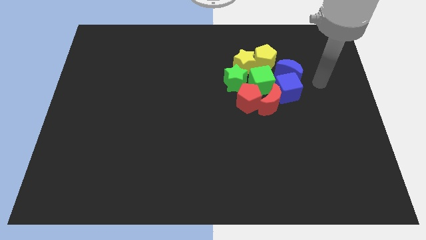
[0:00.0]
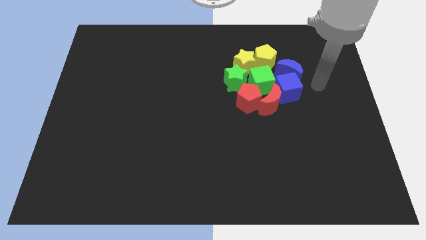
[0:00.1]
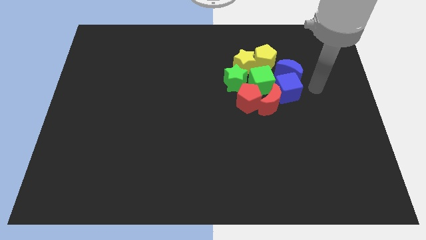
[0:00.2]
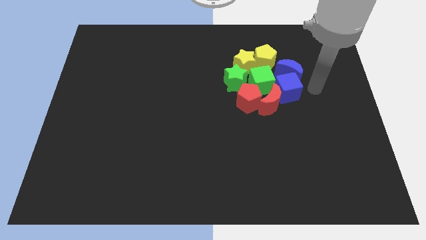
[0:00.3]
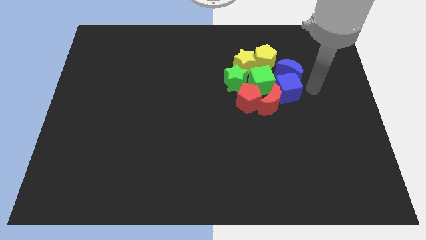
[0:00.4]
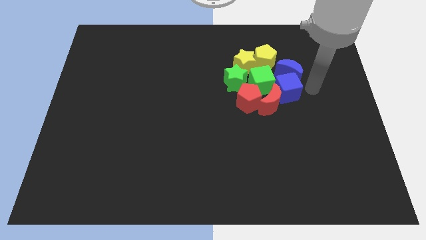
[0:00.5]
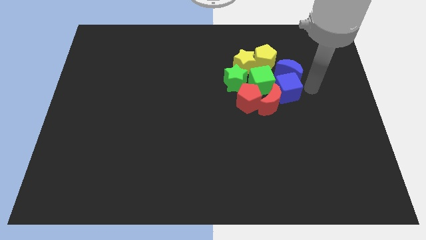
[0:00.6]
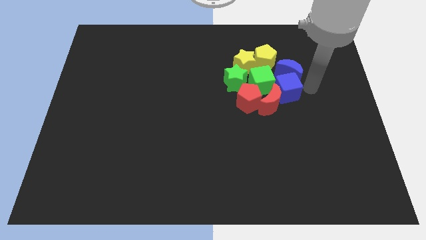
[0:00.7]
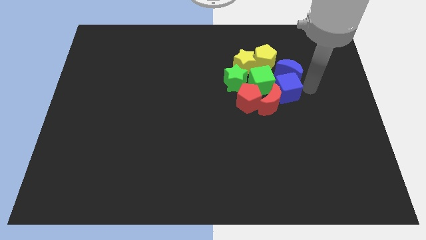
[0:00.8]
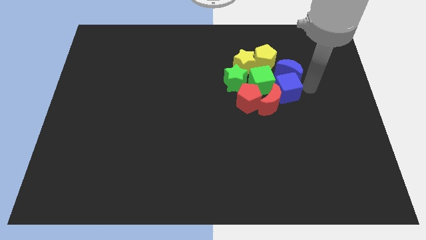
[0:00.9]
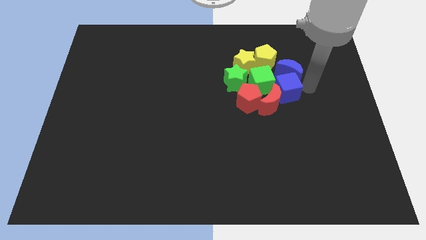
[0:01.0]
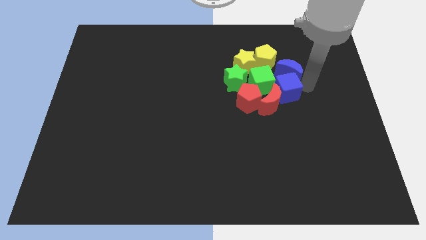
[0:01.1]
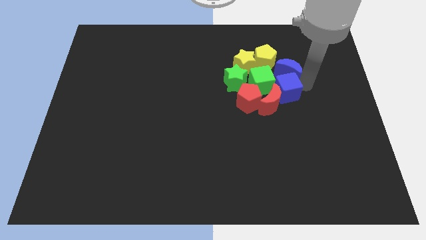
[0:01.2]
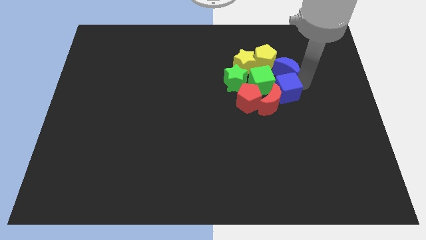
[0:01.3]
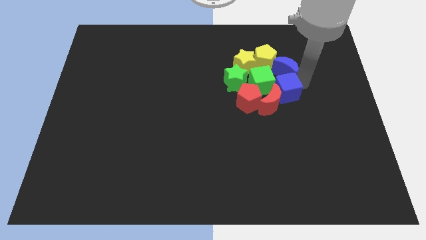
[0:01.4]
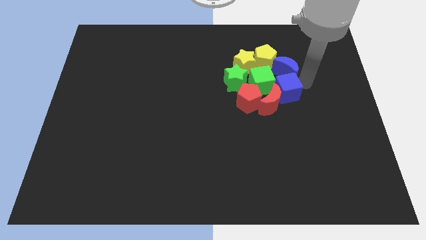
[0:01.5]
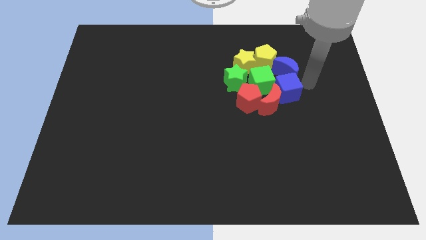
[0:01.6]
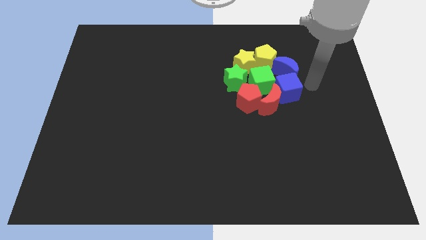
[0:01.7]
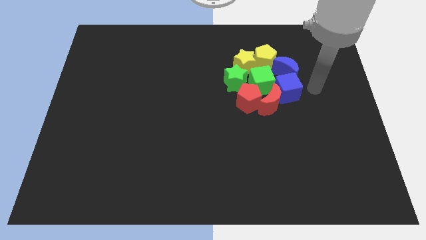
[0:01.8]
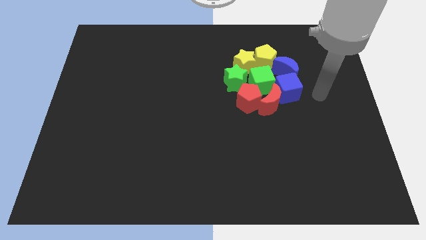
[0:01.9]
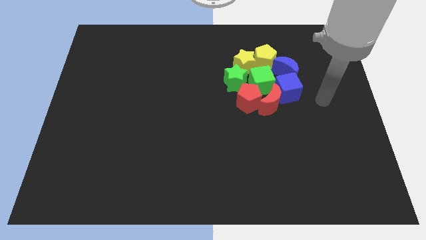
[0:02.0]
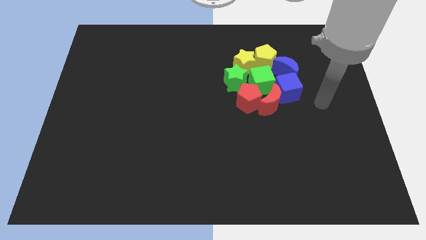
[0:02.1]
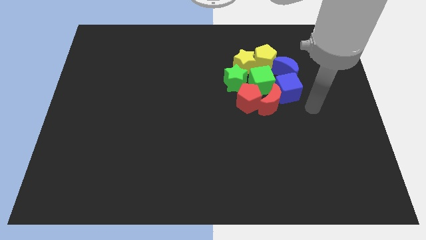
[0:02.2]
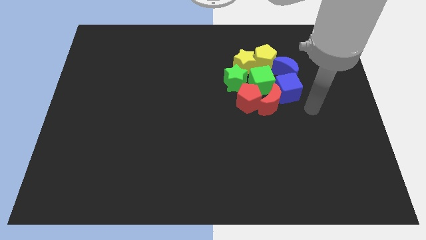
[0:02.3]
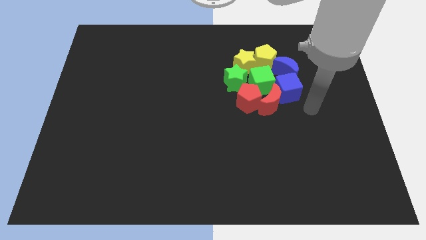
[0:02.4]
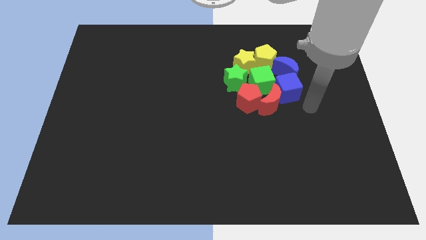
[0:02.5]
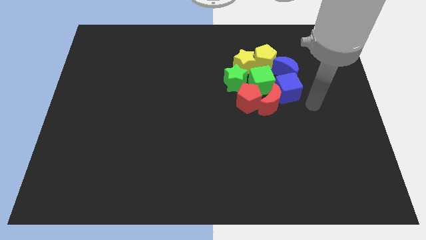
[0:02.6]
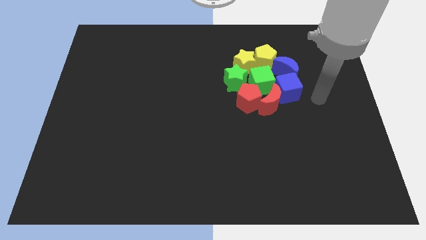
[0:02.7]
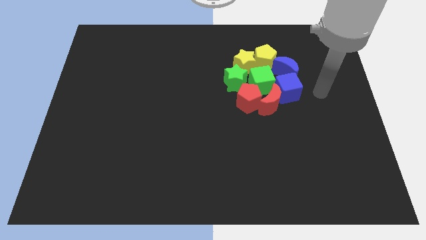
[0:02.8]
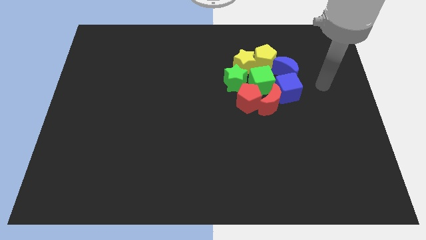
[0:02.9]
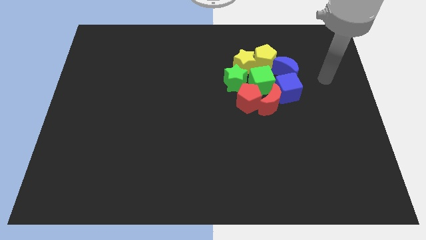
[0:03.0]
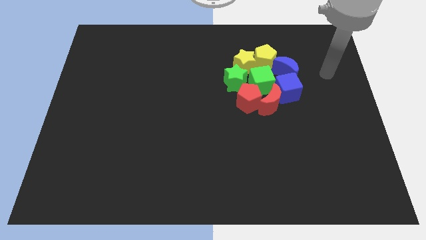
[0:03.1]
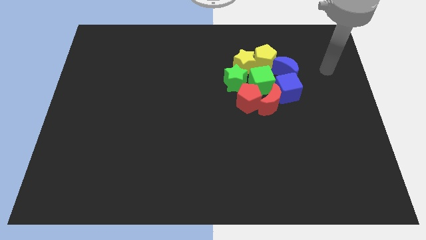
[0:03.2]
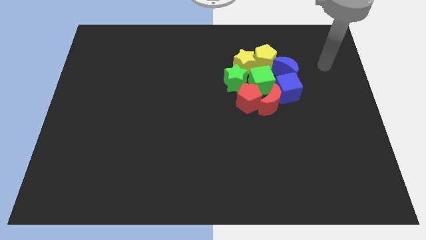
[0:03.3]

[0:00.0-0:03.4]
push the blue moon into group of all blocks

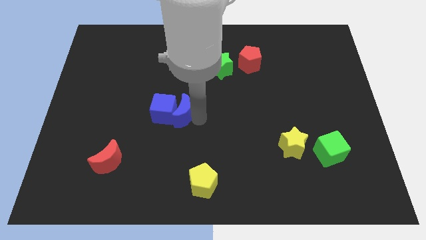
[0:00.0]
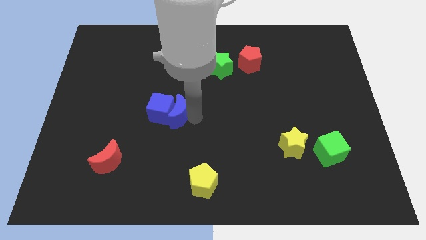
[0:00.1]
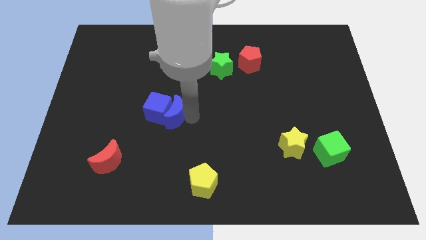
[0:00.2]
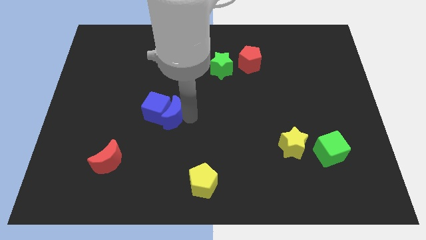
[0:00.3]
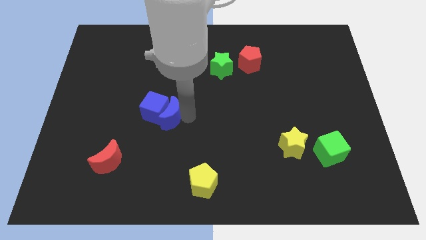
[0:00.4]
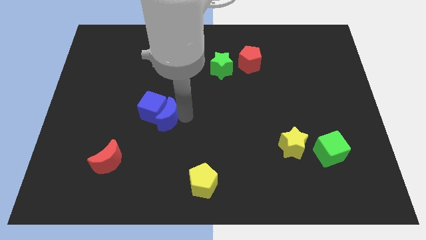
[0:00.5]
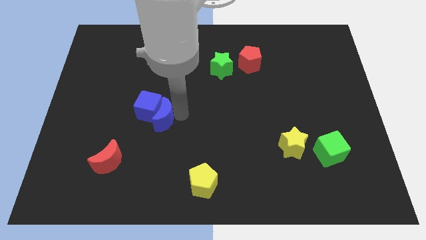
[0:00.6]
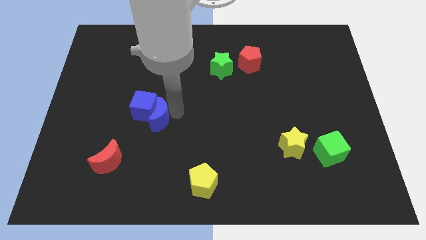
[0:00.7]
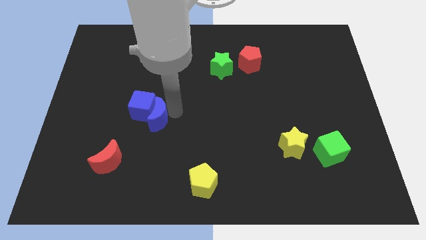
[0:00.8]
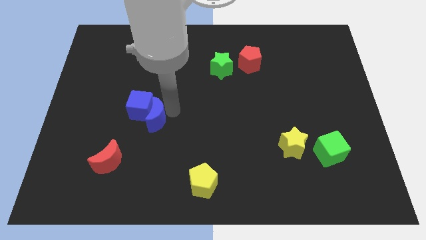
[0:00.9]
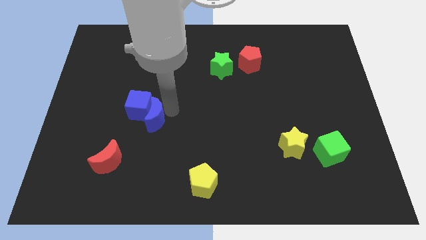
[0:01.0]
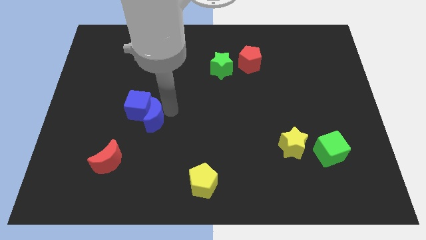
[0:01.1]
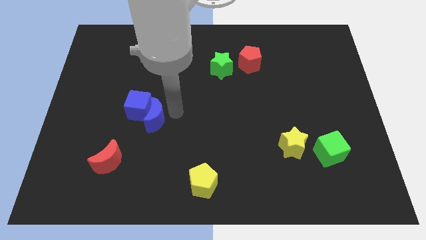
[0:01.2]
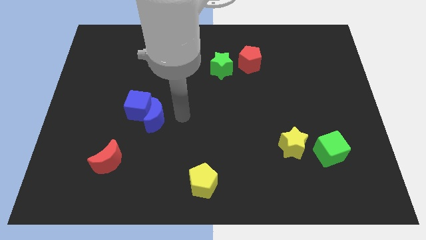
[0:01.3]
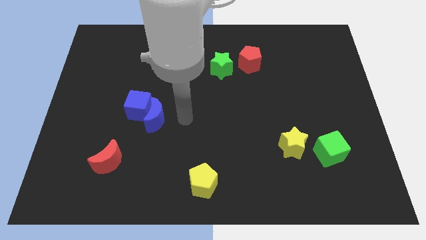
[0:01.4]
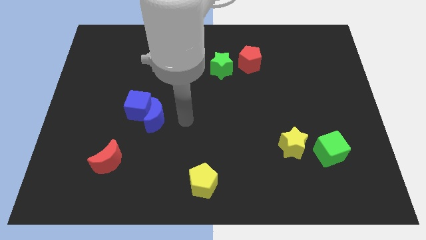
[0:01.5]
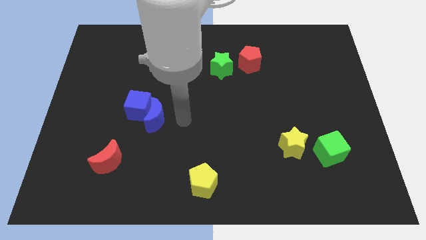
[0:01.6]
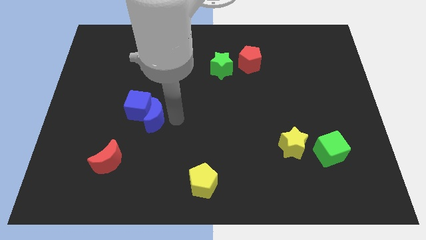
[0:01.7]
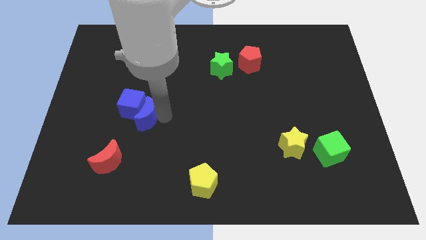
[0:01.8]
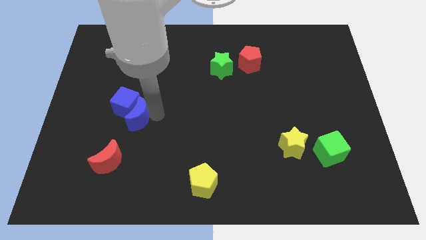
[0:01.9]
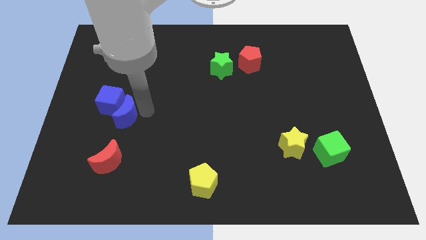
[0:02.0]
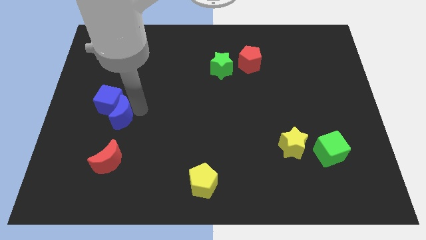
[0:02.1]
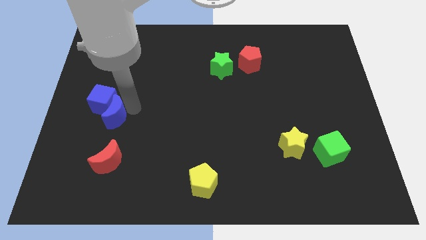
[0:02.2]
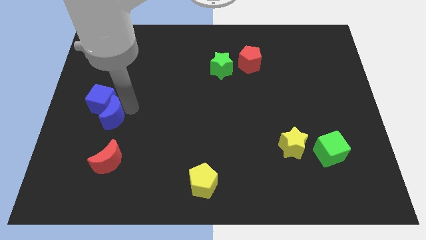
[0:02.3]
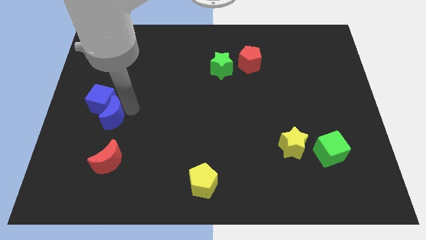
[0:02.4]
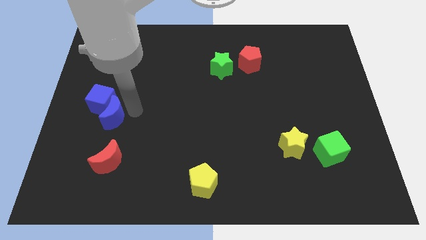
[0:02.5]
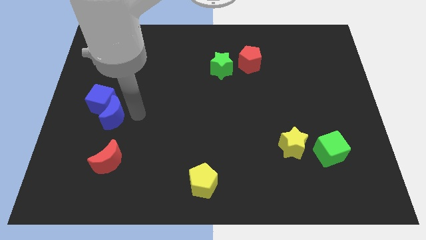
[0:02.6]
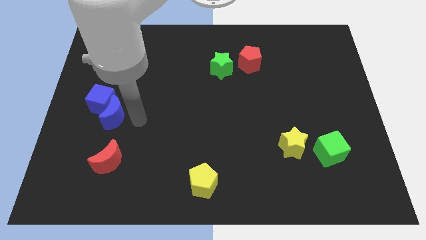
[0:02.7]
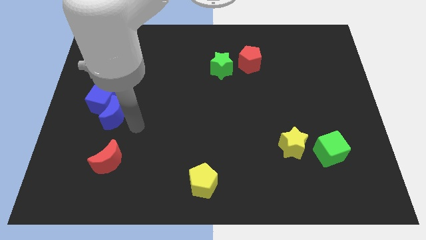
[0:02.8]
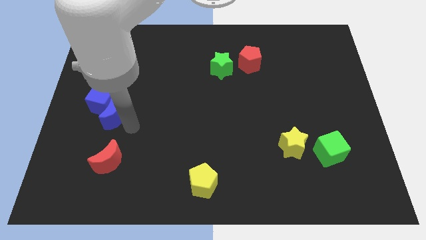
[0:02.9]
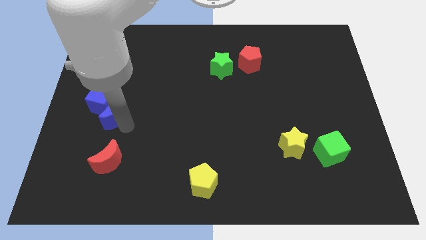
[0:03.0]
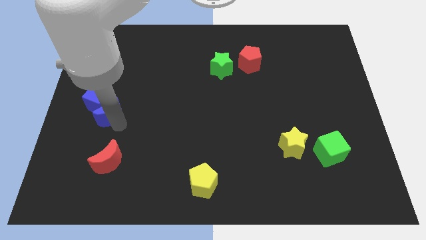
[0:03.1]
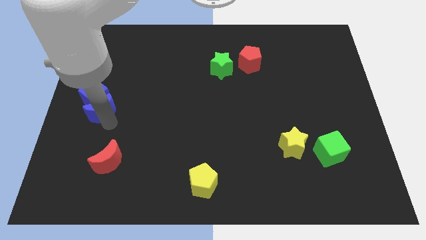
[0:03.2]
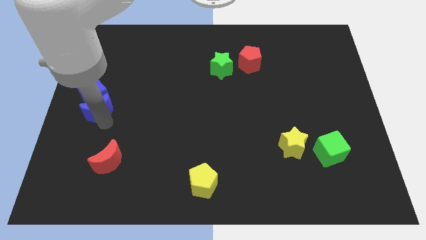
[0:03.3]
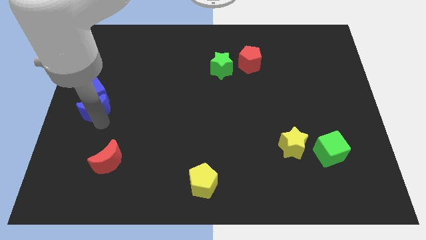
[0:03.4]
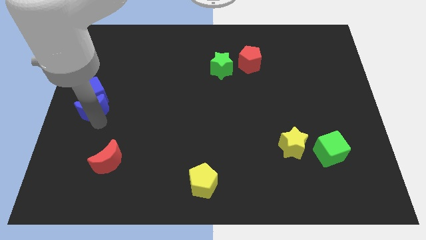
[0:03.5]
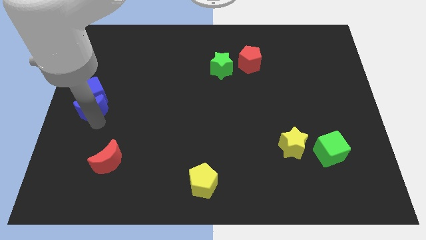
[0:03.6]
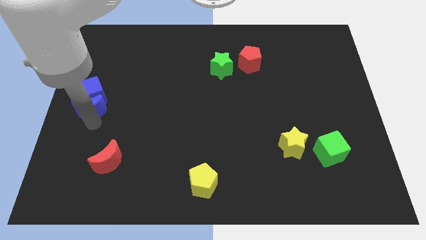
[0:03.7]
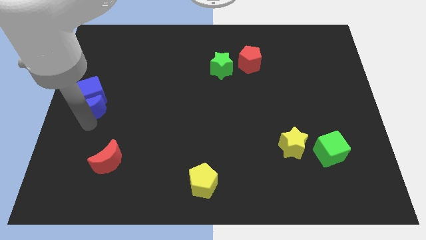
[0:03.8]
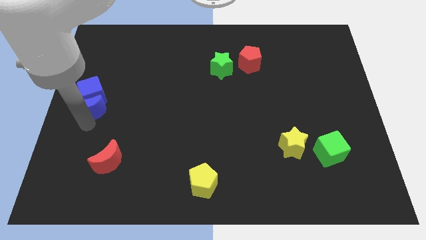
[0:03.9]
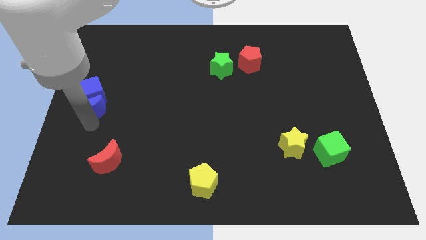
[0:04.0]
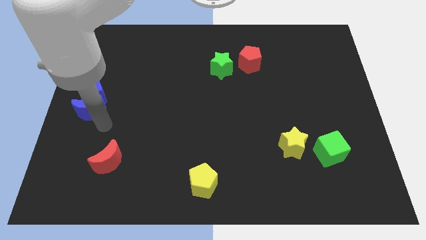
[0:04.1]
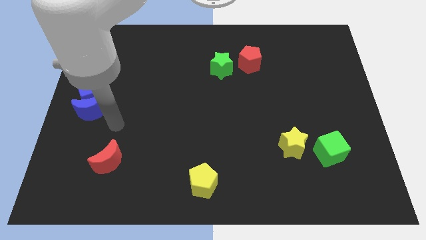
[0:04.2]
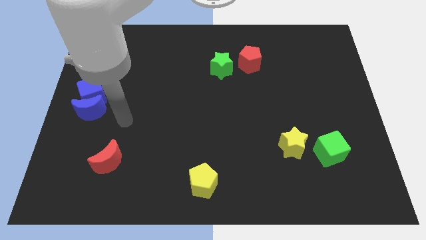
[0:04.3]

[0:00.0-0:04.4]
move the blue crescent along with blue cube towards the left center of the board

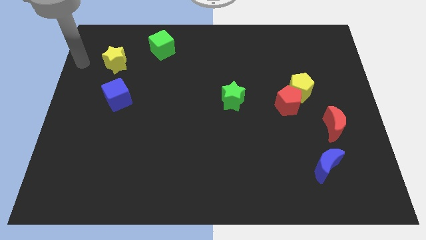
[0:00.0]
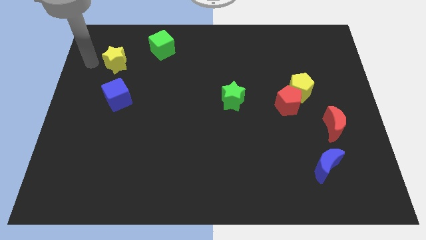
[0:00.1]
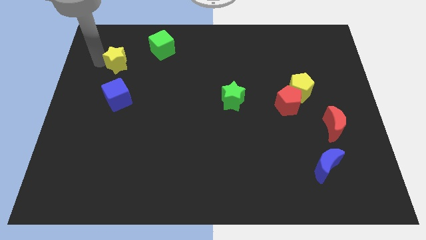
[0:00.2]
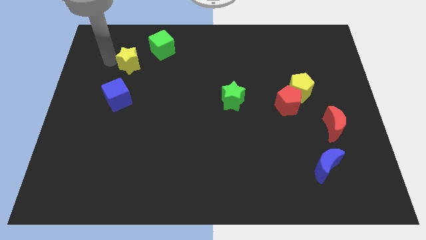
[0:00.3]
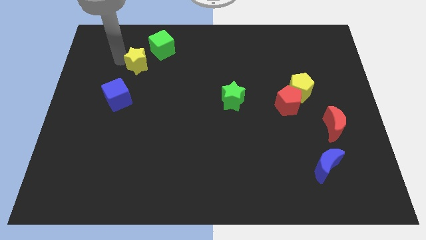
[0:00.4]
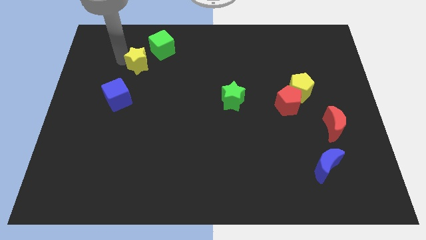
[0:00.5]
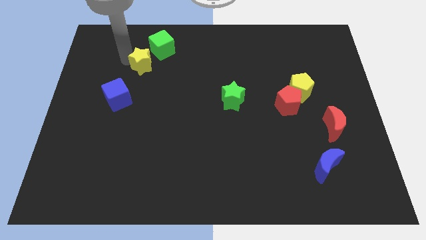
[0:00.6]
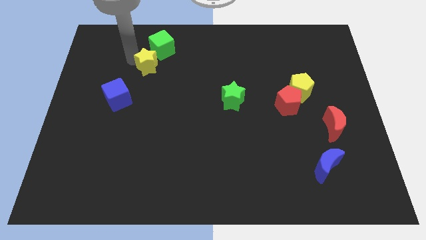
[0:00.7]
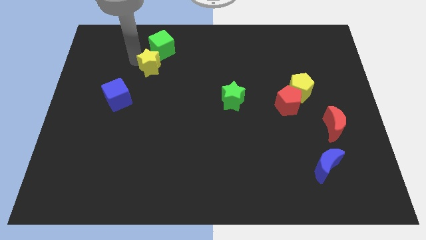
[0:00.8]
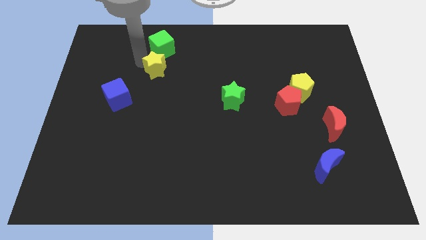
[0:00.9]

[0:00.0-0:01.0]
place the yellow star diagonal to the green cube

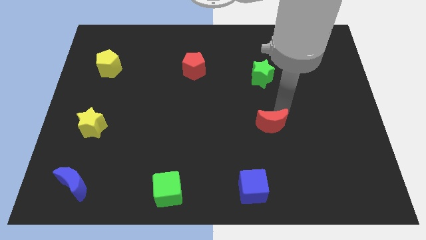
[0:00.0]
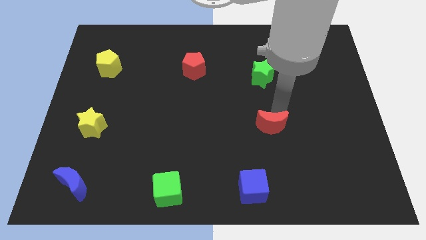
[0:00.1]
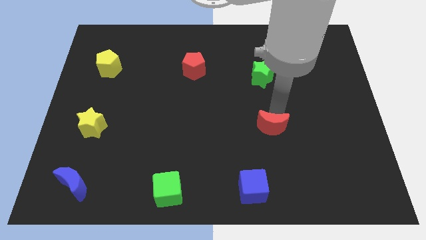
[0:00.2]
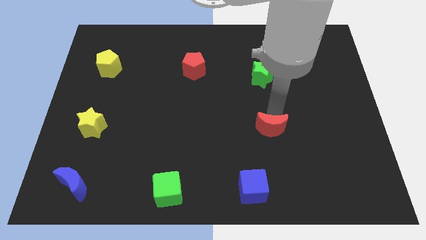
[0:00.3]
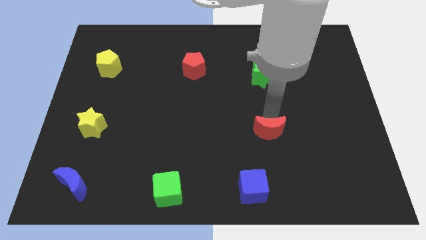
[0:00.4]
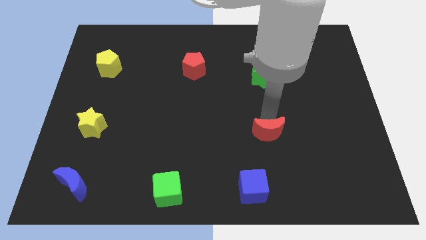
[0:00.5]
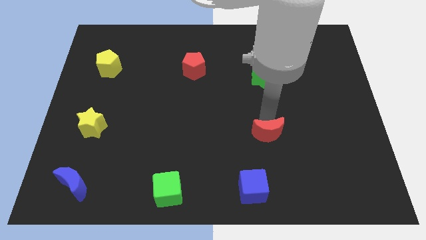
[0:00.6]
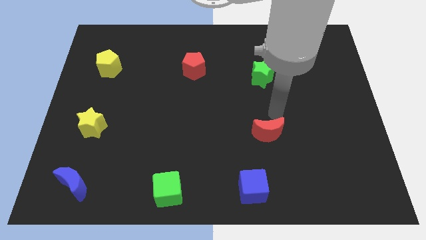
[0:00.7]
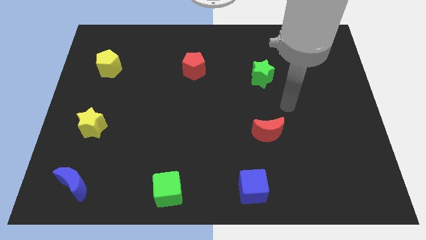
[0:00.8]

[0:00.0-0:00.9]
slightly push the red crescent to the bottom of the board
